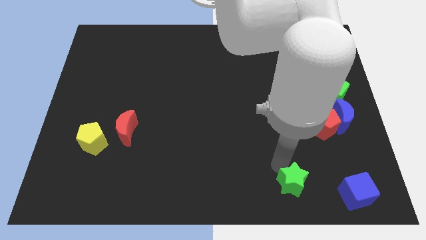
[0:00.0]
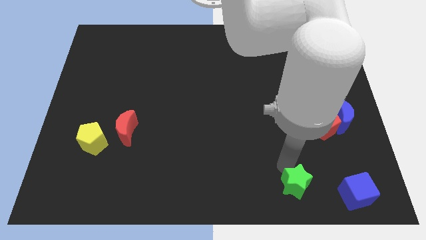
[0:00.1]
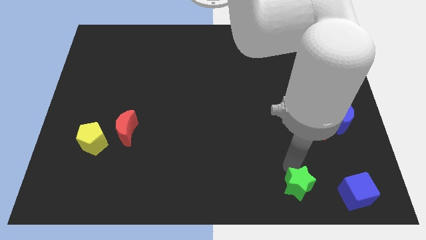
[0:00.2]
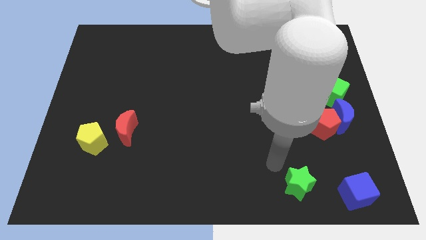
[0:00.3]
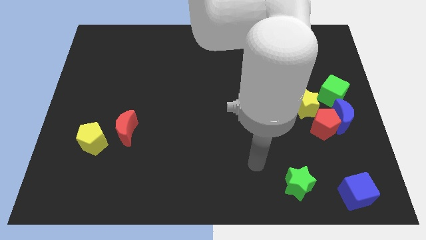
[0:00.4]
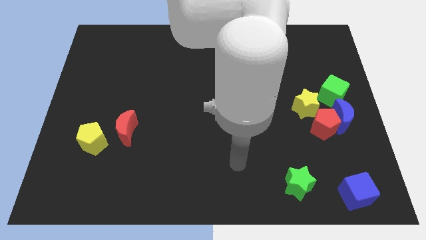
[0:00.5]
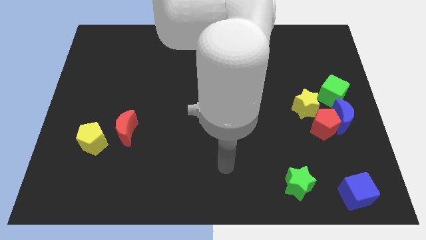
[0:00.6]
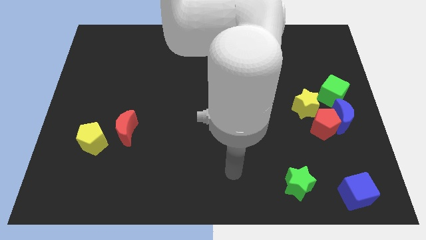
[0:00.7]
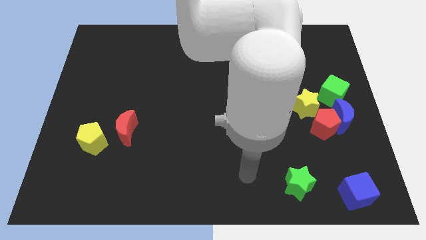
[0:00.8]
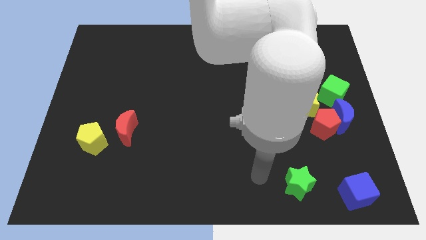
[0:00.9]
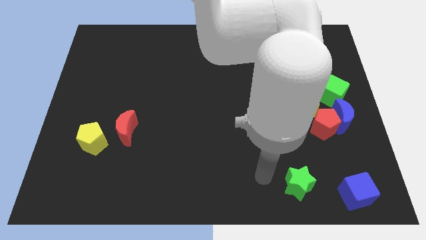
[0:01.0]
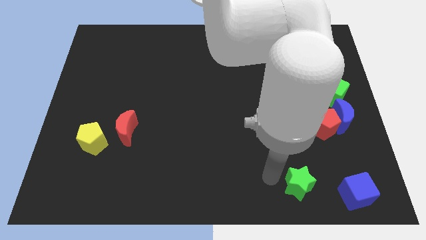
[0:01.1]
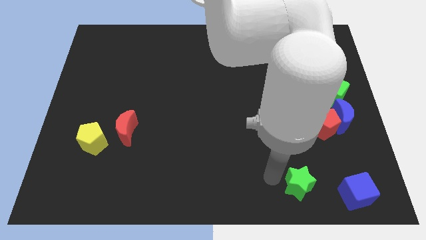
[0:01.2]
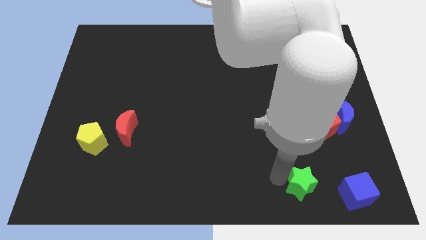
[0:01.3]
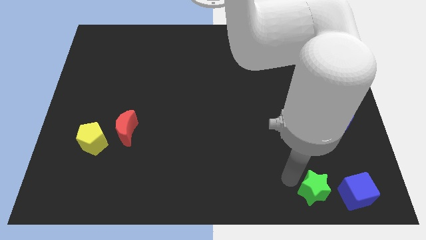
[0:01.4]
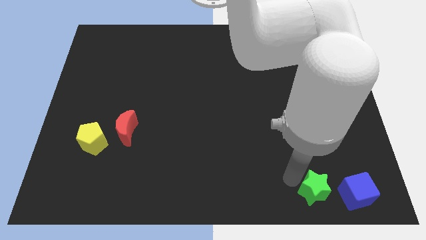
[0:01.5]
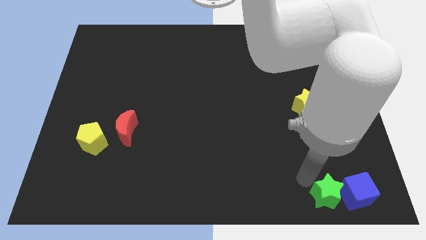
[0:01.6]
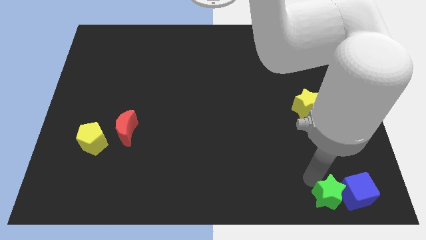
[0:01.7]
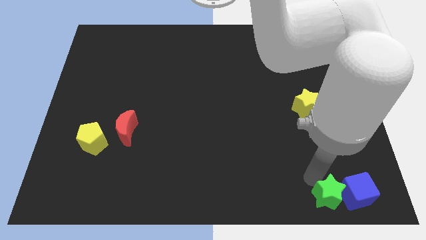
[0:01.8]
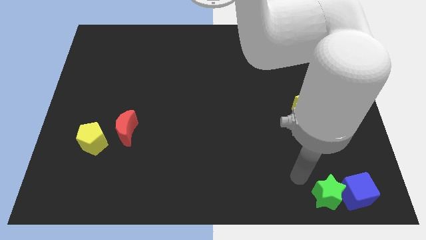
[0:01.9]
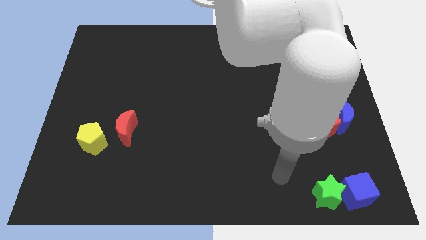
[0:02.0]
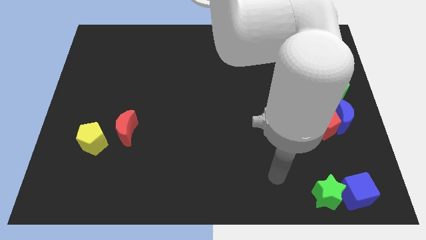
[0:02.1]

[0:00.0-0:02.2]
push the green star into the blue cube

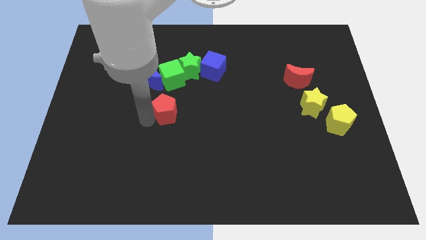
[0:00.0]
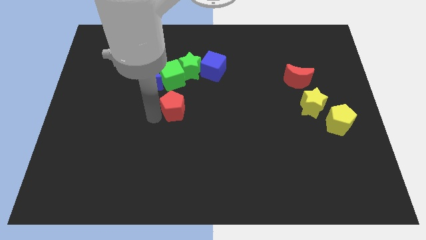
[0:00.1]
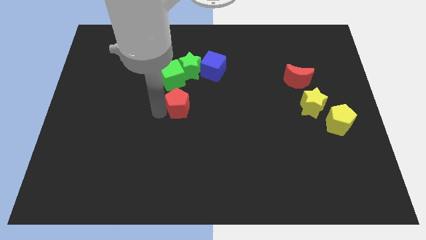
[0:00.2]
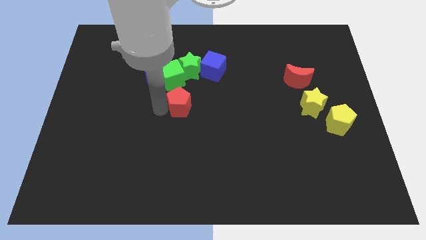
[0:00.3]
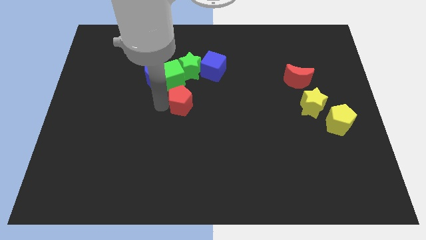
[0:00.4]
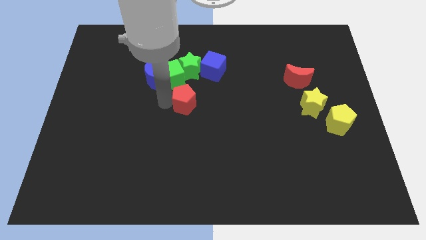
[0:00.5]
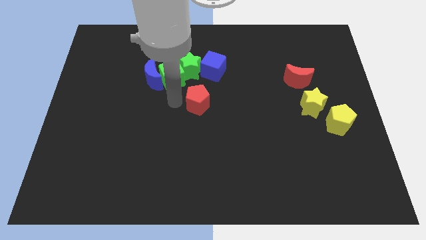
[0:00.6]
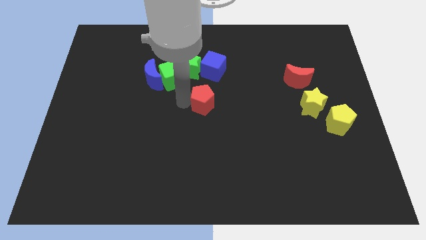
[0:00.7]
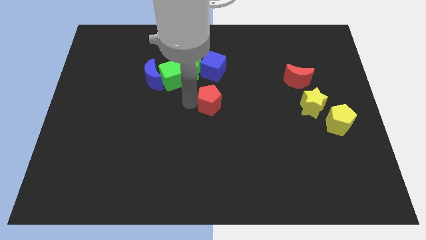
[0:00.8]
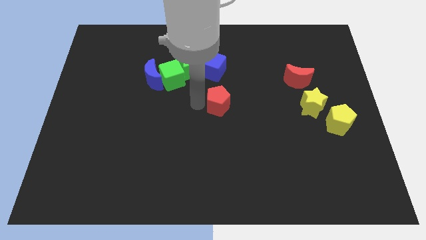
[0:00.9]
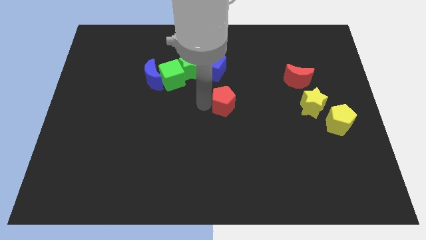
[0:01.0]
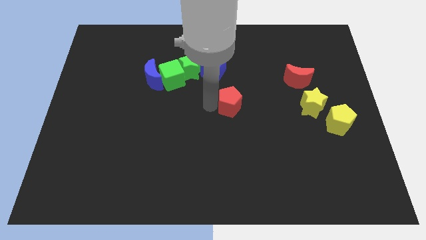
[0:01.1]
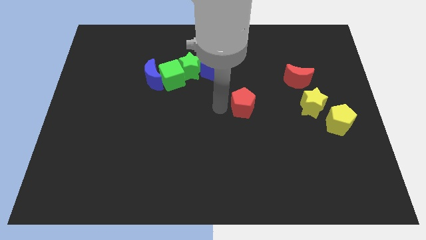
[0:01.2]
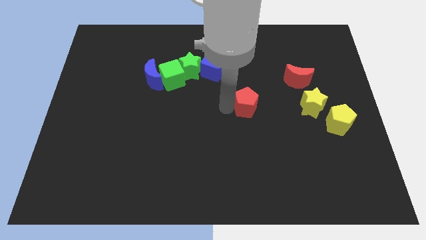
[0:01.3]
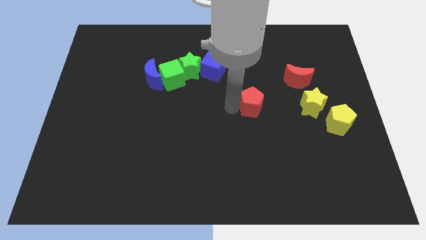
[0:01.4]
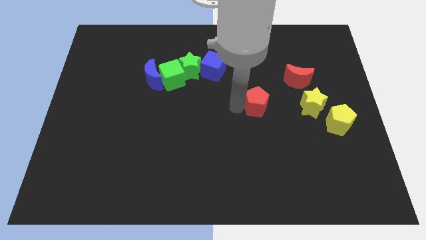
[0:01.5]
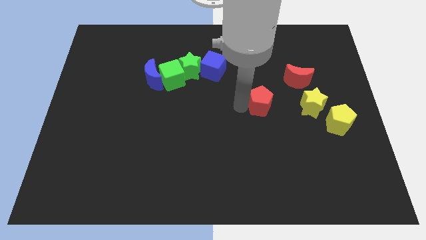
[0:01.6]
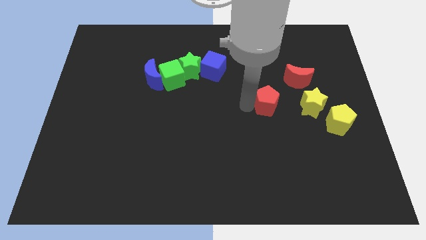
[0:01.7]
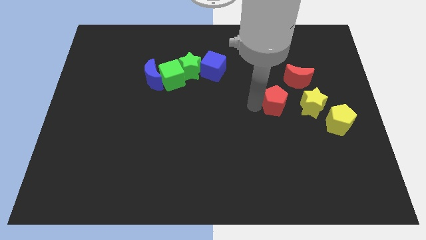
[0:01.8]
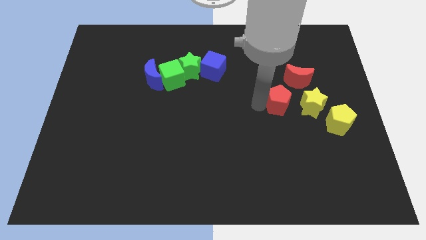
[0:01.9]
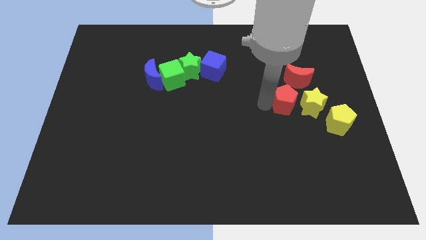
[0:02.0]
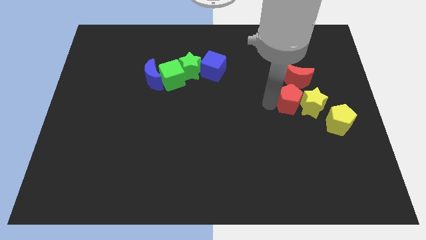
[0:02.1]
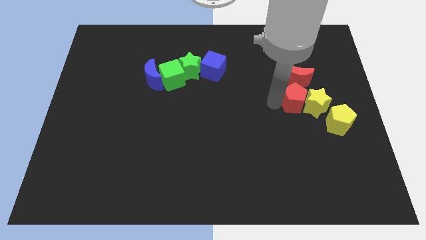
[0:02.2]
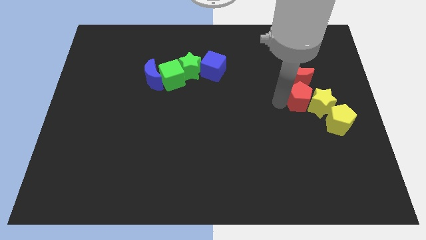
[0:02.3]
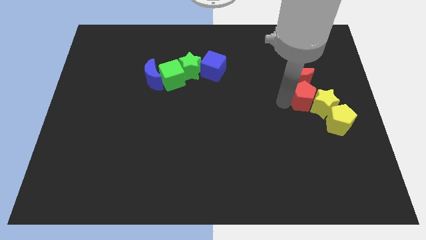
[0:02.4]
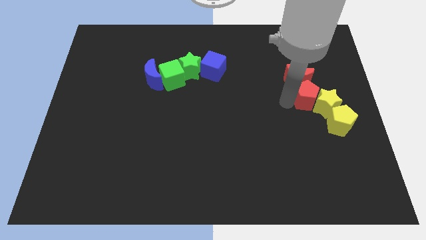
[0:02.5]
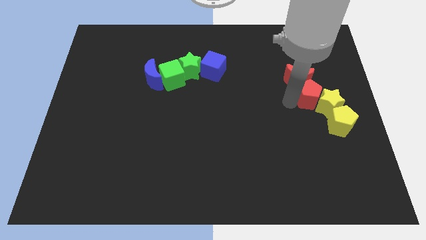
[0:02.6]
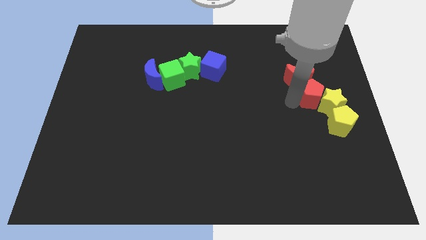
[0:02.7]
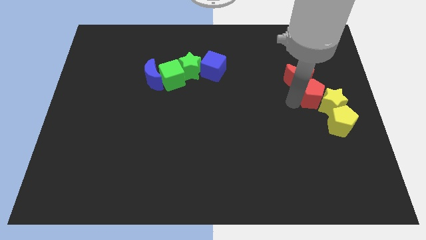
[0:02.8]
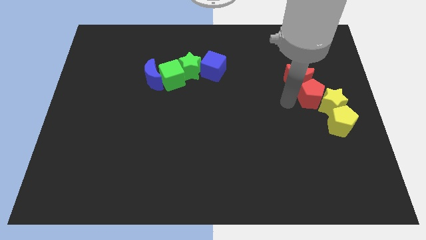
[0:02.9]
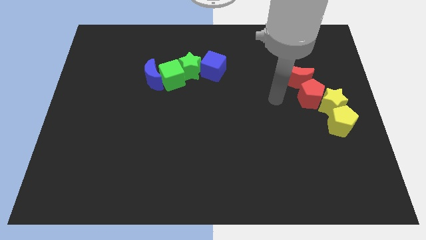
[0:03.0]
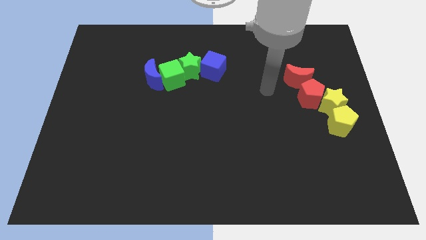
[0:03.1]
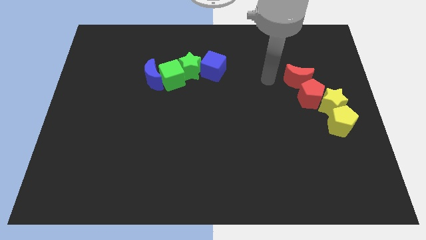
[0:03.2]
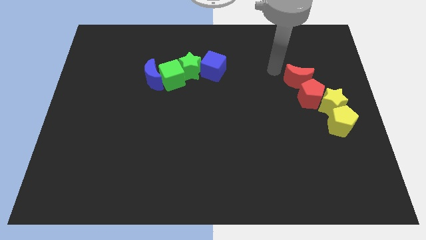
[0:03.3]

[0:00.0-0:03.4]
move red pentagon below the red crescent

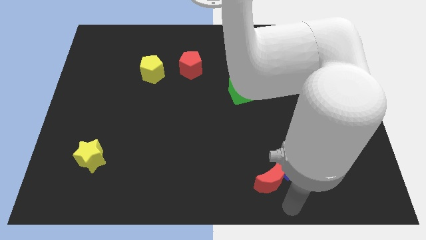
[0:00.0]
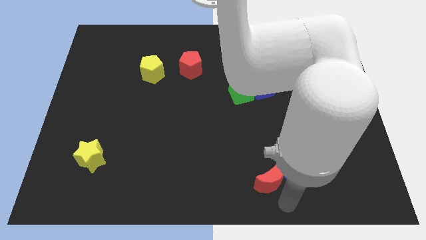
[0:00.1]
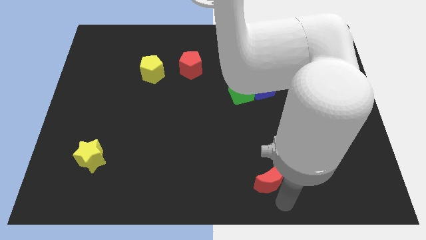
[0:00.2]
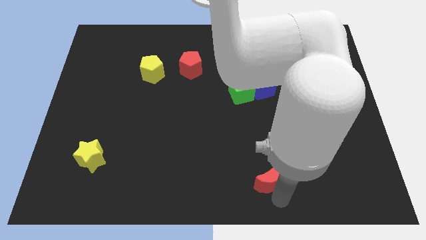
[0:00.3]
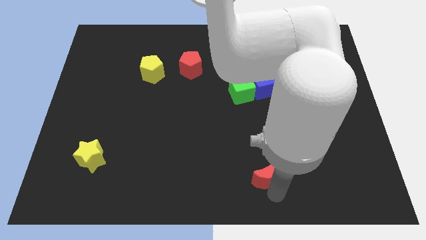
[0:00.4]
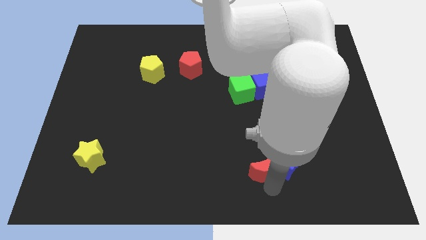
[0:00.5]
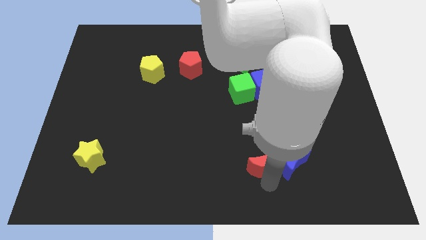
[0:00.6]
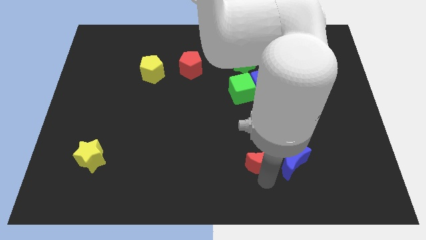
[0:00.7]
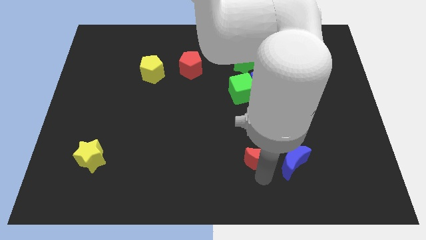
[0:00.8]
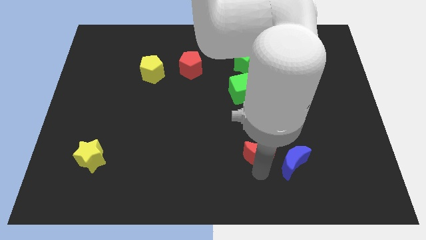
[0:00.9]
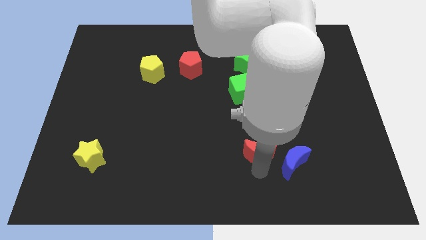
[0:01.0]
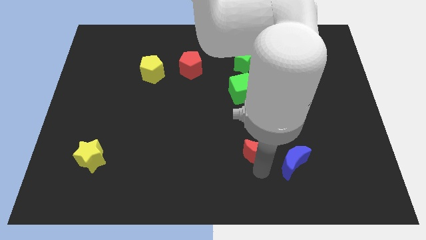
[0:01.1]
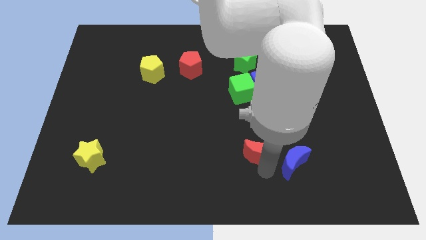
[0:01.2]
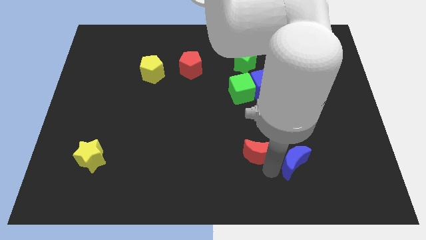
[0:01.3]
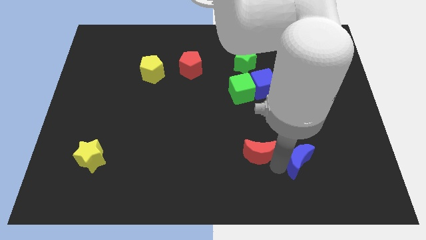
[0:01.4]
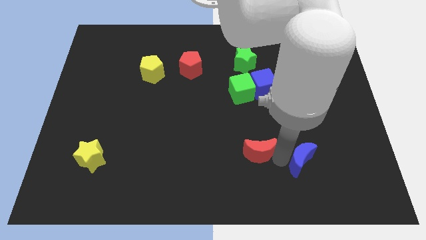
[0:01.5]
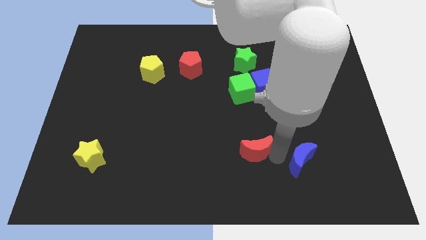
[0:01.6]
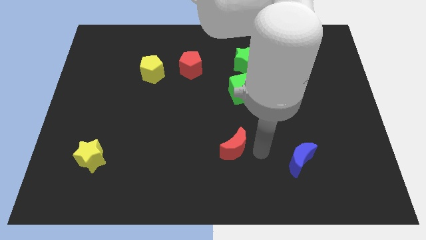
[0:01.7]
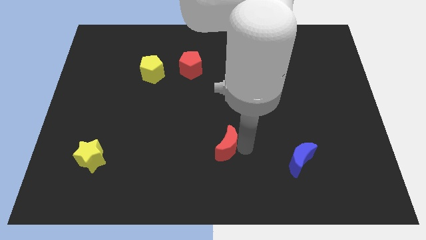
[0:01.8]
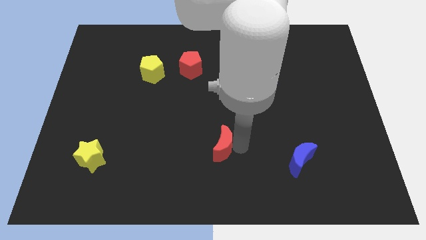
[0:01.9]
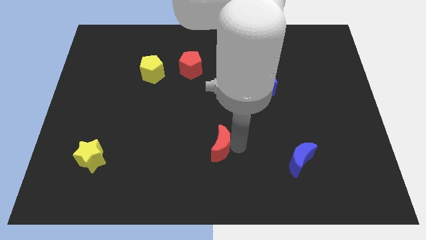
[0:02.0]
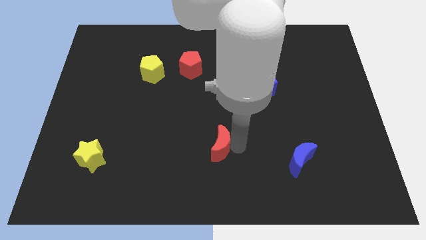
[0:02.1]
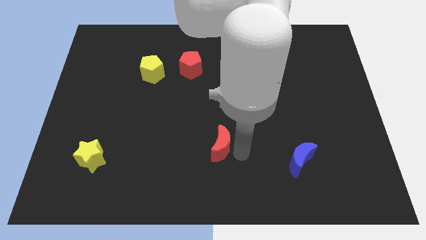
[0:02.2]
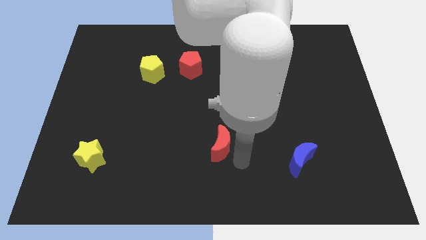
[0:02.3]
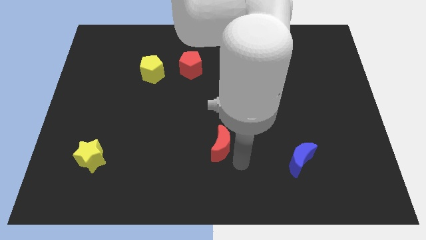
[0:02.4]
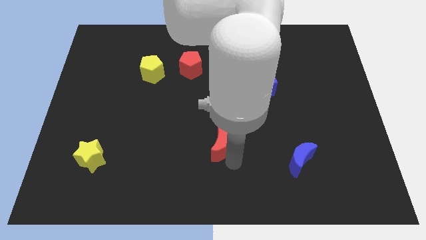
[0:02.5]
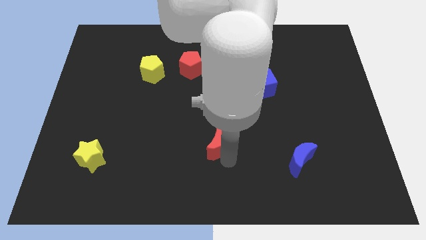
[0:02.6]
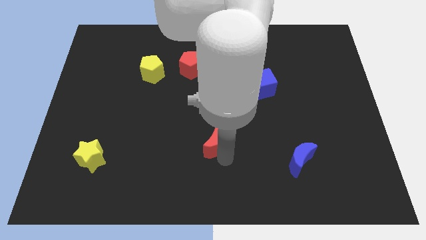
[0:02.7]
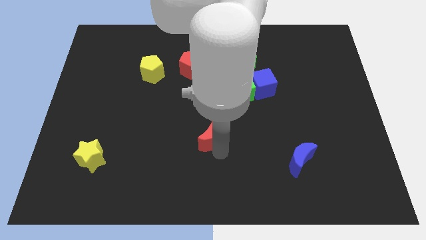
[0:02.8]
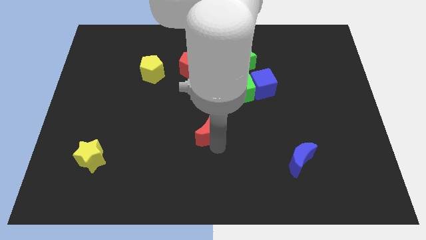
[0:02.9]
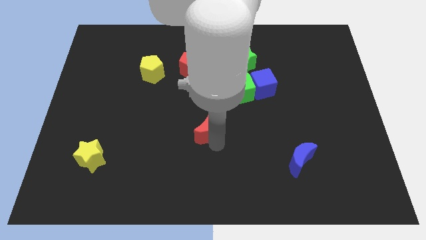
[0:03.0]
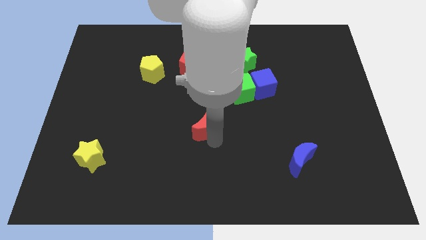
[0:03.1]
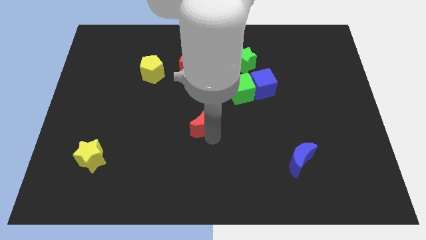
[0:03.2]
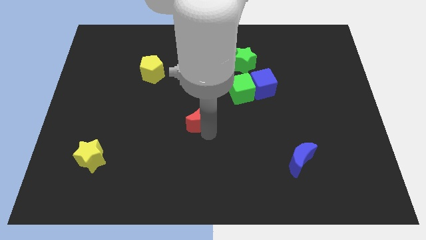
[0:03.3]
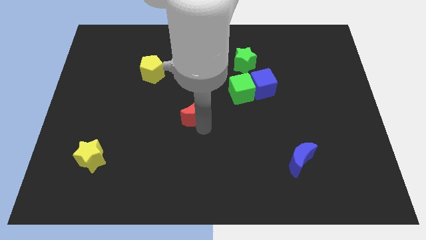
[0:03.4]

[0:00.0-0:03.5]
move the red moon towards the center

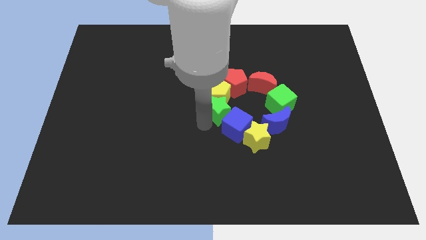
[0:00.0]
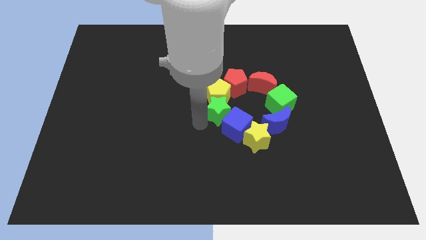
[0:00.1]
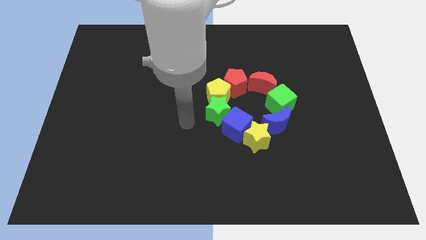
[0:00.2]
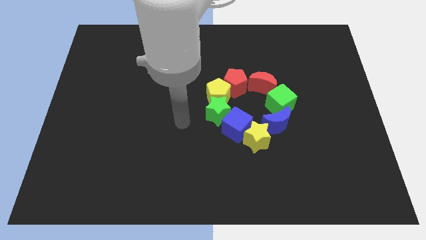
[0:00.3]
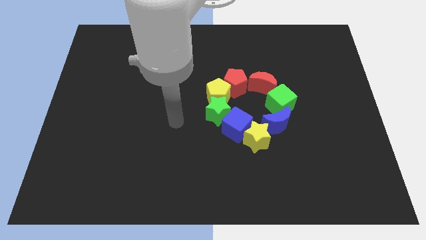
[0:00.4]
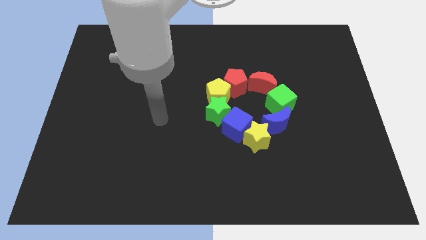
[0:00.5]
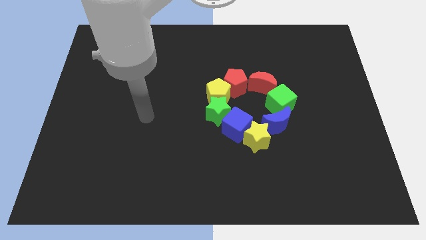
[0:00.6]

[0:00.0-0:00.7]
move the arm away from the green star
